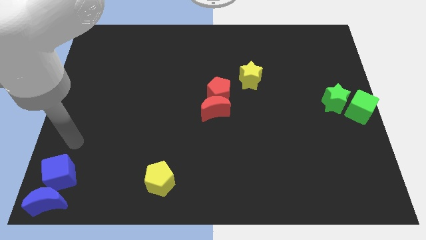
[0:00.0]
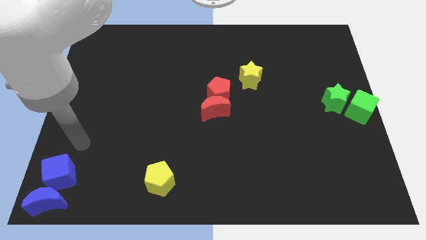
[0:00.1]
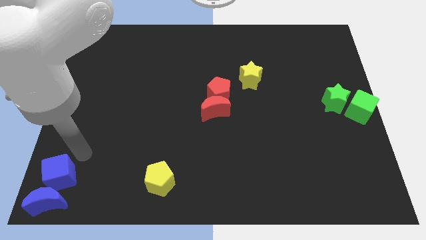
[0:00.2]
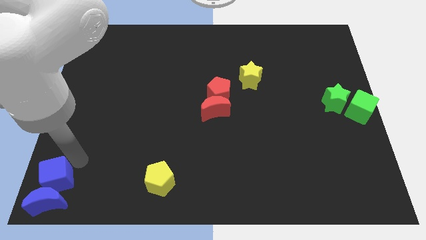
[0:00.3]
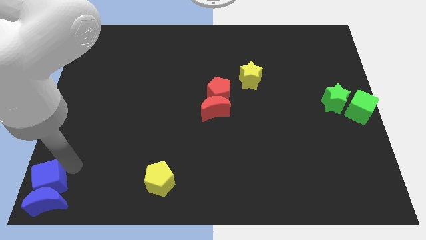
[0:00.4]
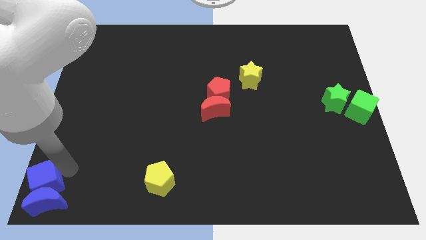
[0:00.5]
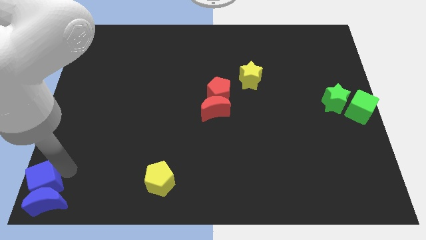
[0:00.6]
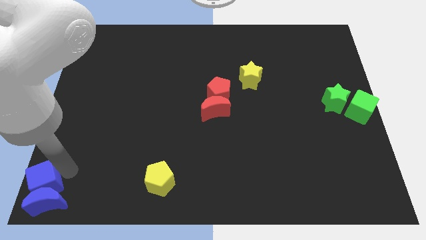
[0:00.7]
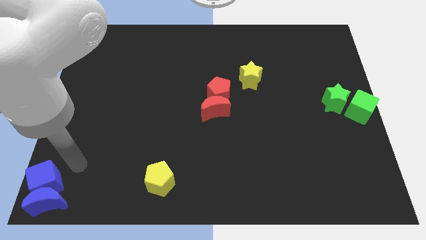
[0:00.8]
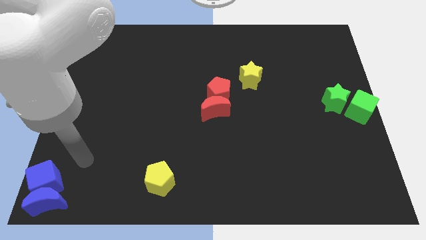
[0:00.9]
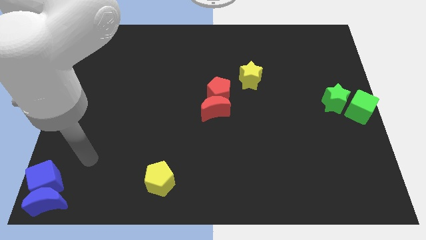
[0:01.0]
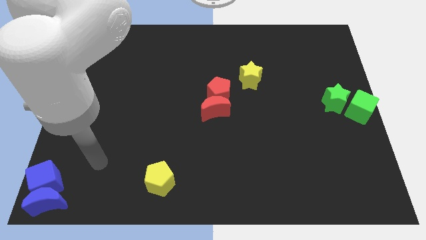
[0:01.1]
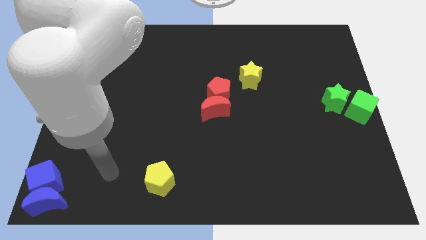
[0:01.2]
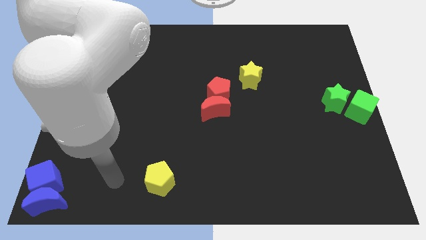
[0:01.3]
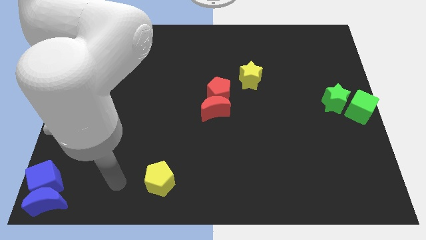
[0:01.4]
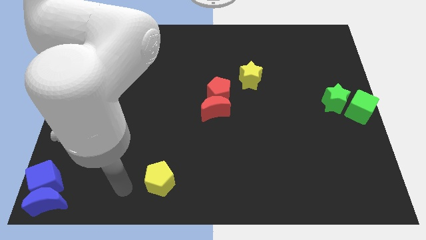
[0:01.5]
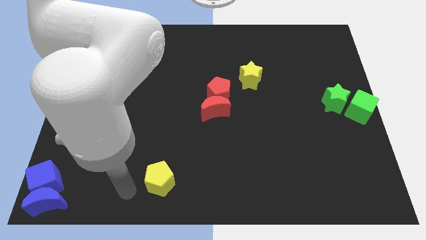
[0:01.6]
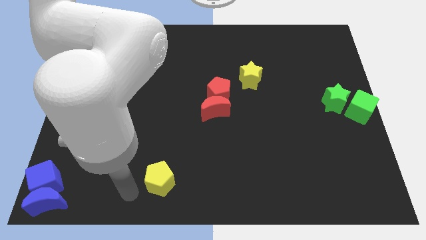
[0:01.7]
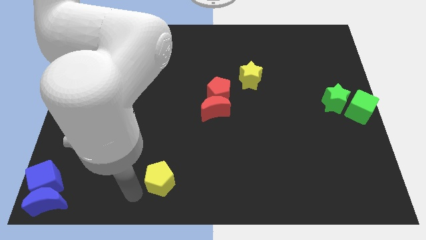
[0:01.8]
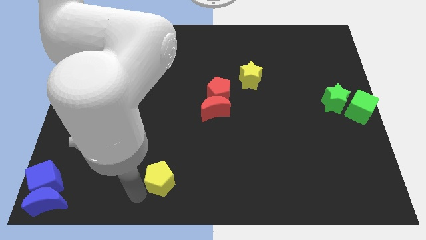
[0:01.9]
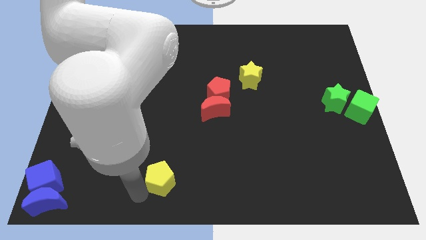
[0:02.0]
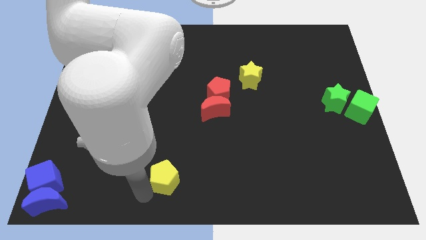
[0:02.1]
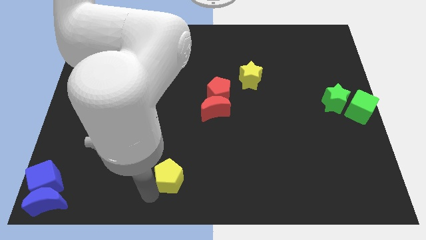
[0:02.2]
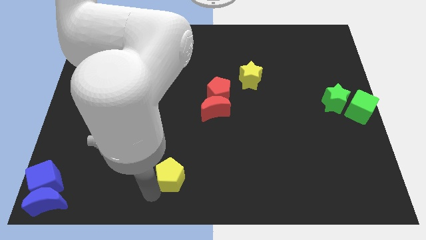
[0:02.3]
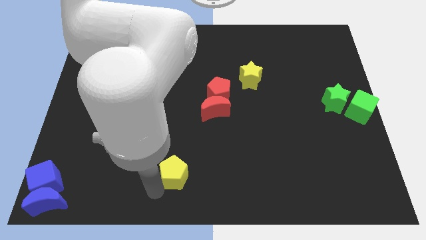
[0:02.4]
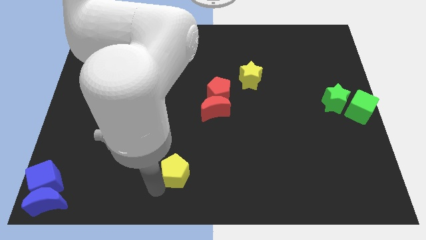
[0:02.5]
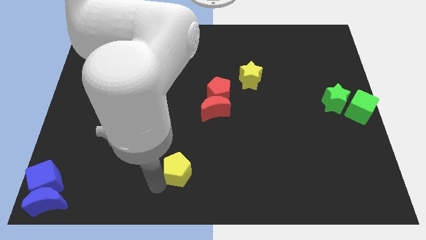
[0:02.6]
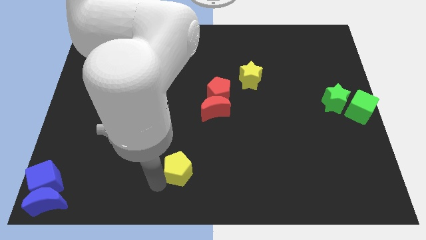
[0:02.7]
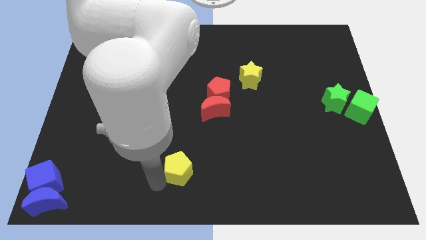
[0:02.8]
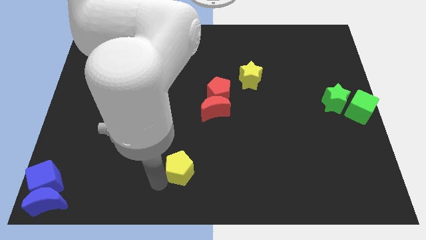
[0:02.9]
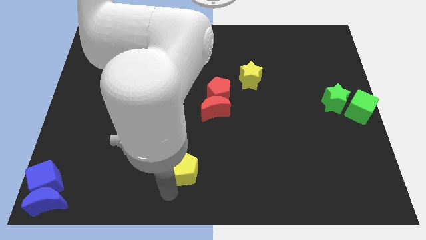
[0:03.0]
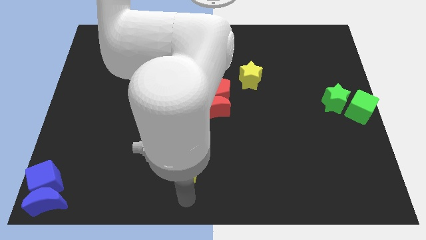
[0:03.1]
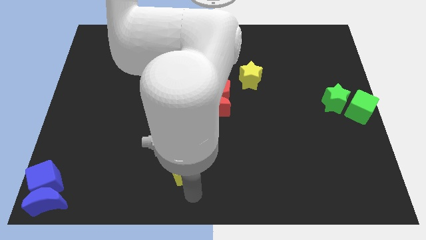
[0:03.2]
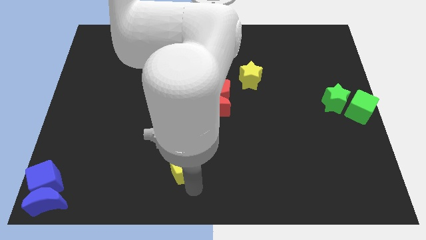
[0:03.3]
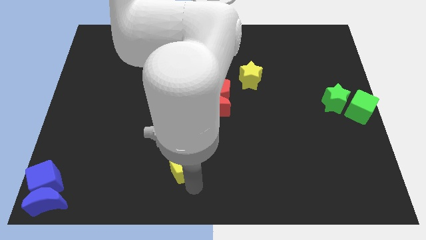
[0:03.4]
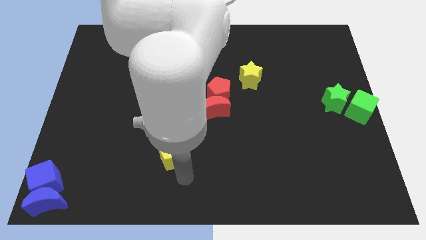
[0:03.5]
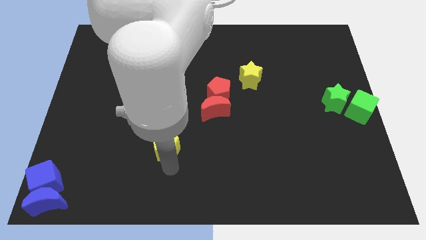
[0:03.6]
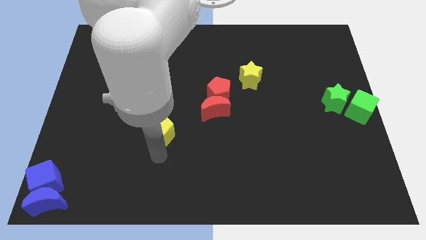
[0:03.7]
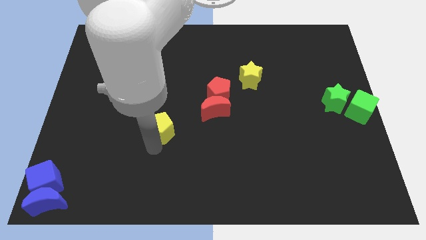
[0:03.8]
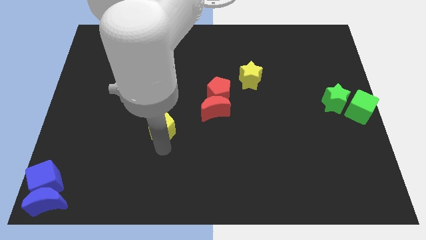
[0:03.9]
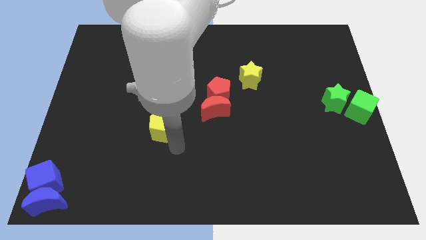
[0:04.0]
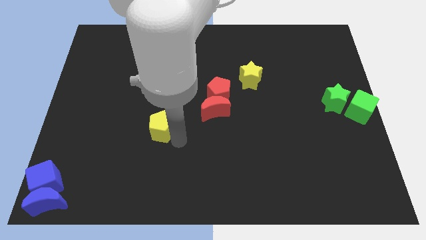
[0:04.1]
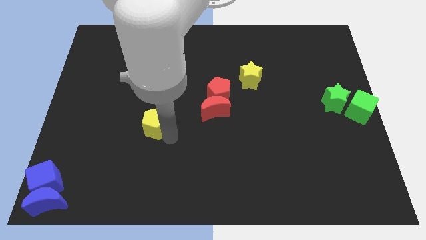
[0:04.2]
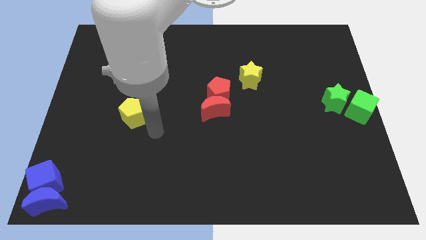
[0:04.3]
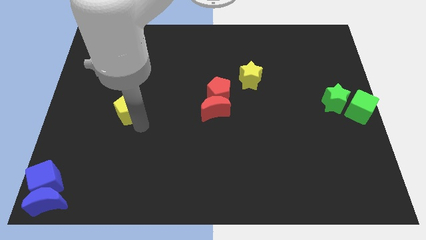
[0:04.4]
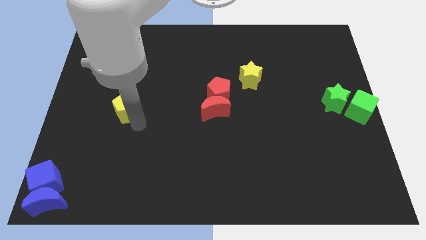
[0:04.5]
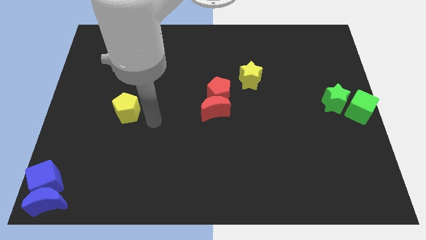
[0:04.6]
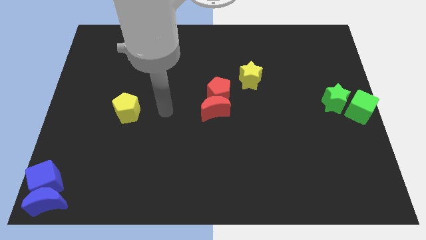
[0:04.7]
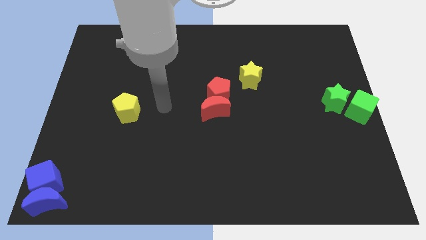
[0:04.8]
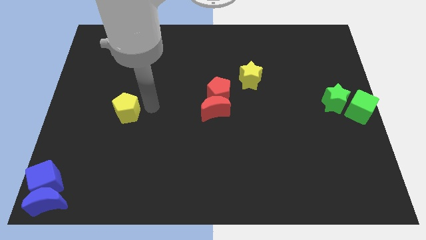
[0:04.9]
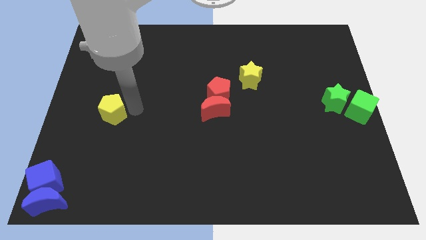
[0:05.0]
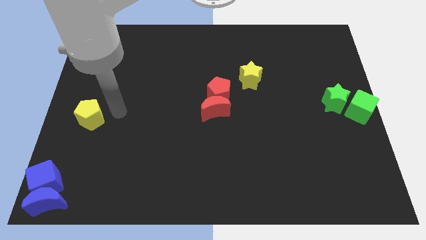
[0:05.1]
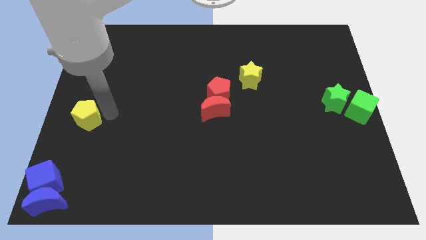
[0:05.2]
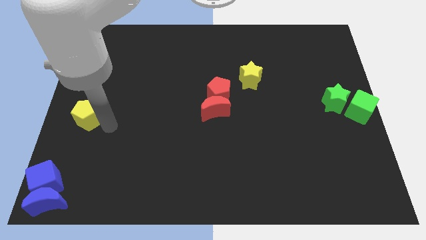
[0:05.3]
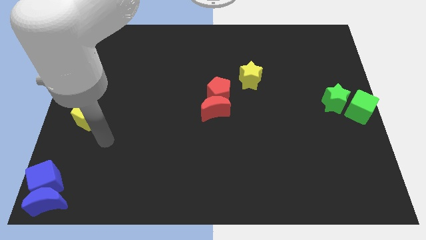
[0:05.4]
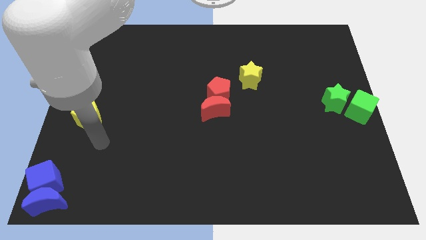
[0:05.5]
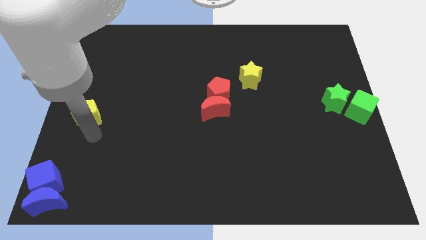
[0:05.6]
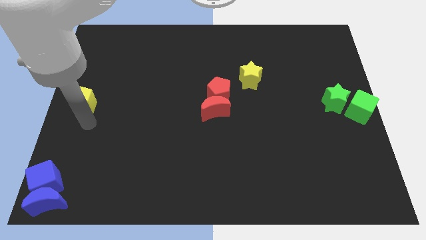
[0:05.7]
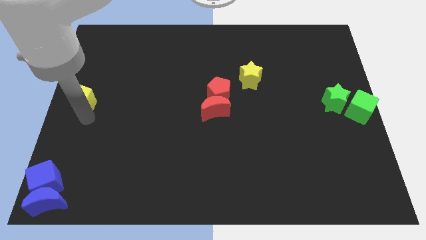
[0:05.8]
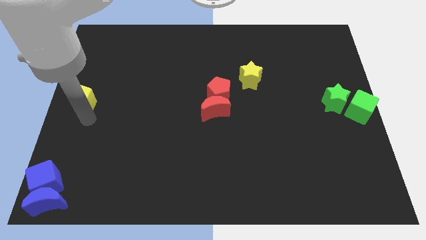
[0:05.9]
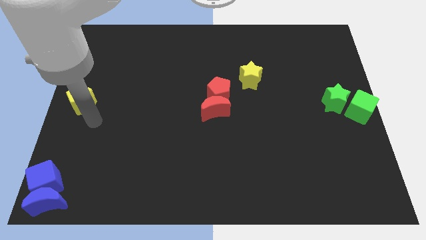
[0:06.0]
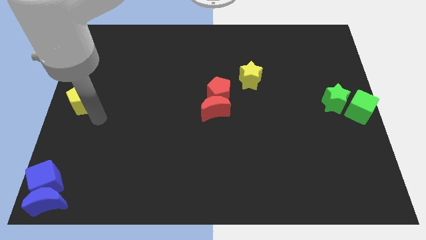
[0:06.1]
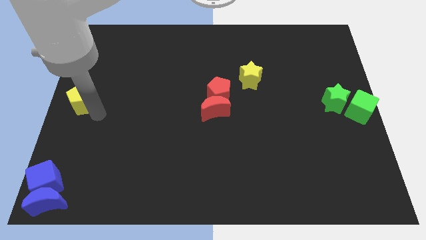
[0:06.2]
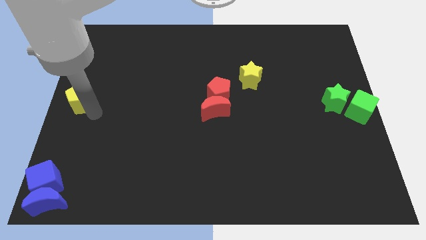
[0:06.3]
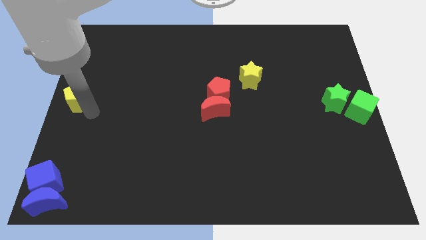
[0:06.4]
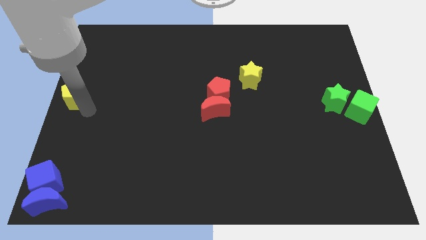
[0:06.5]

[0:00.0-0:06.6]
move the yellow pentagon to the center left of the board

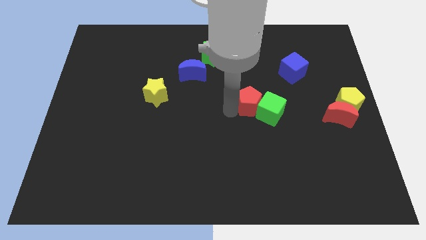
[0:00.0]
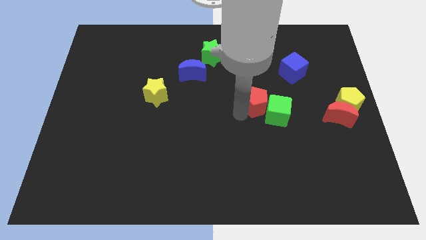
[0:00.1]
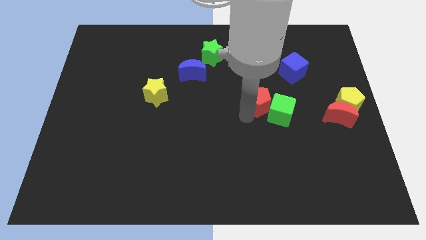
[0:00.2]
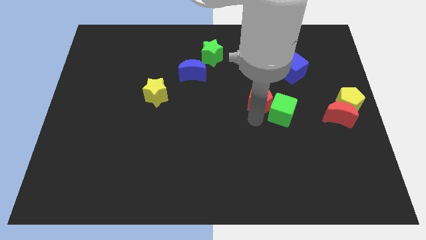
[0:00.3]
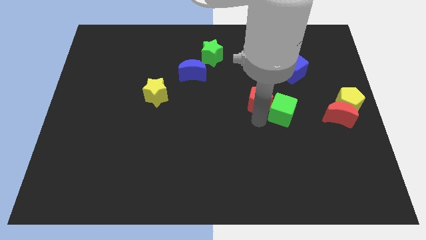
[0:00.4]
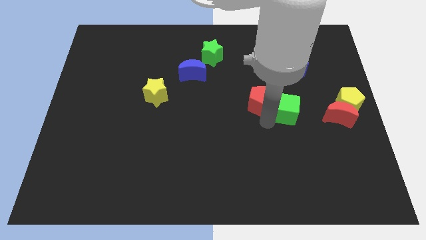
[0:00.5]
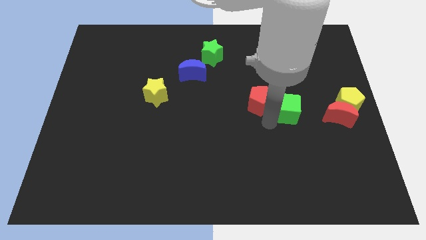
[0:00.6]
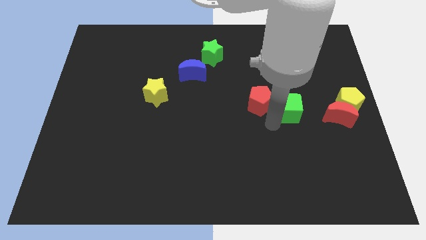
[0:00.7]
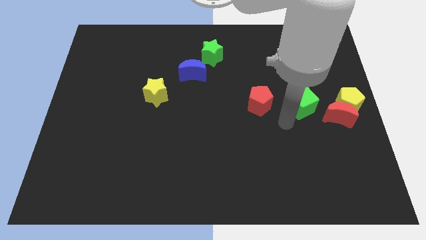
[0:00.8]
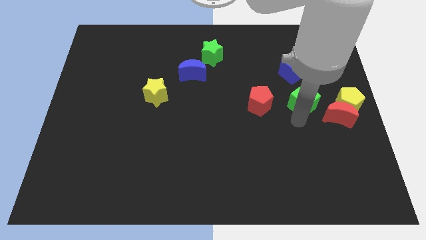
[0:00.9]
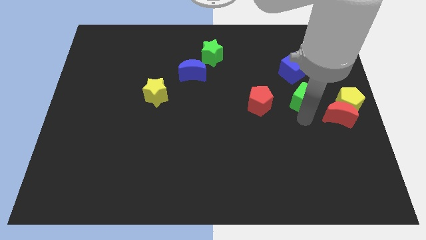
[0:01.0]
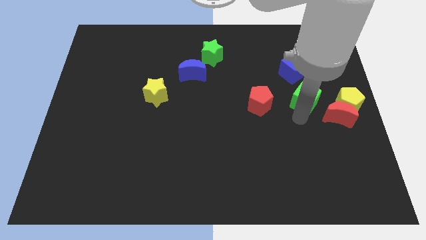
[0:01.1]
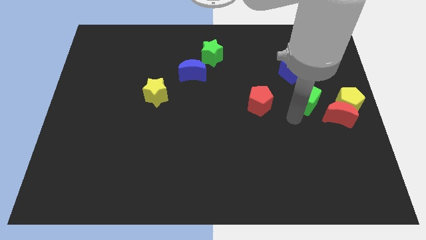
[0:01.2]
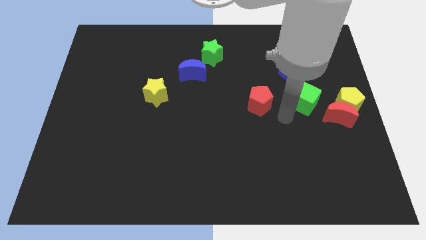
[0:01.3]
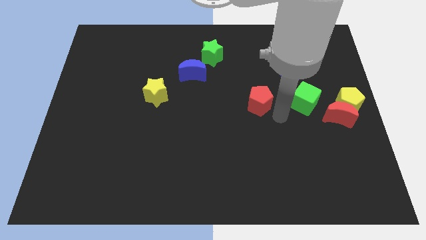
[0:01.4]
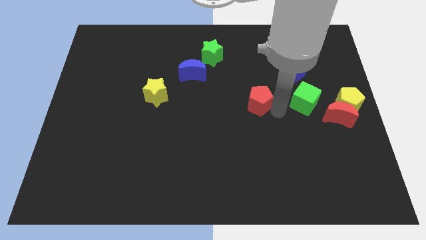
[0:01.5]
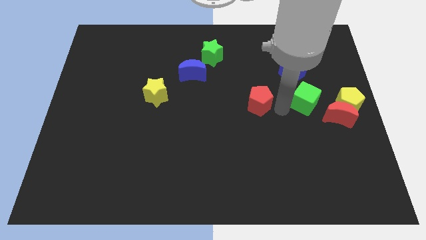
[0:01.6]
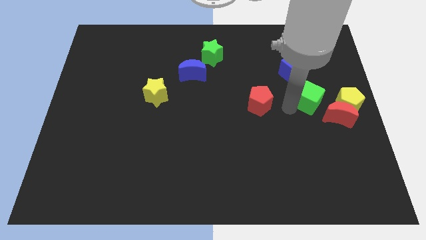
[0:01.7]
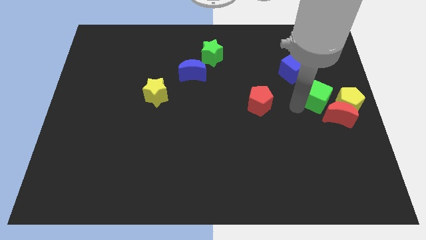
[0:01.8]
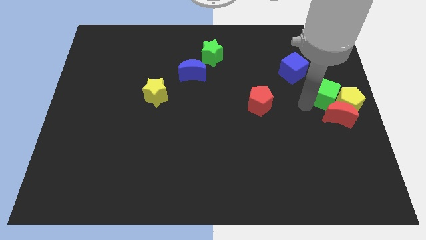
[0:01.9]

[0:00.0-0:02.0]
move the green cube towards the left of the yellow penatgon

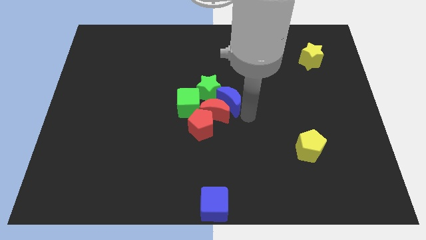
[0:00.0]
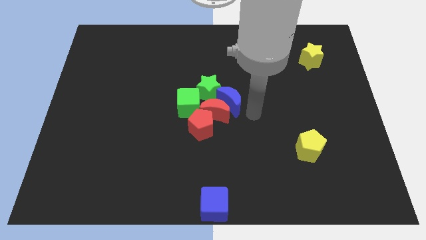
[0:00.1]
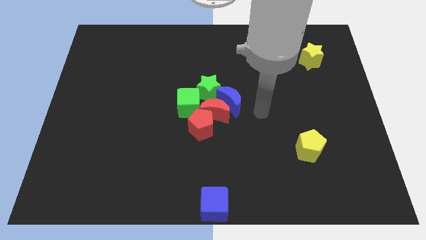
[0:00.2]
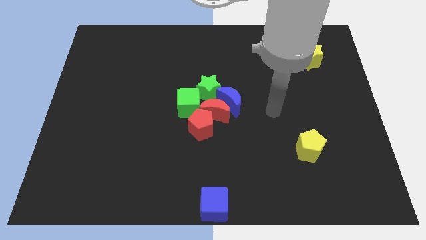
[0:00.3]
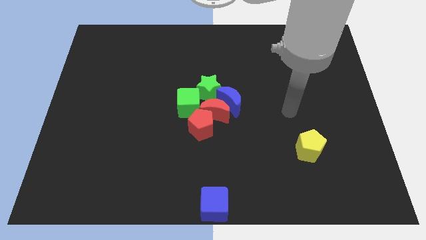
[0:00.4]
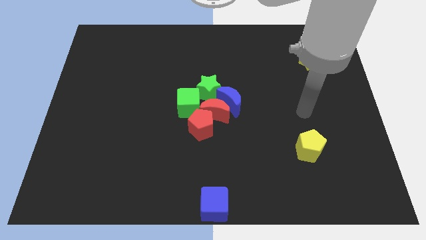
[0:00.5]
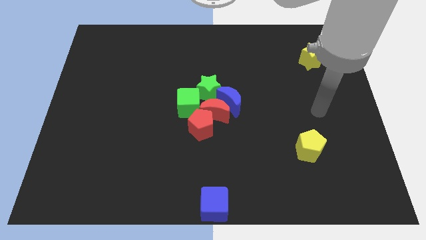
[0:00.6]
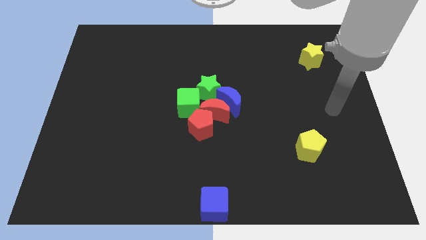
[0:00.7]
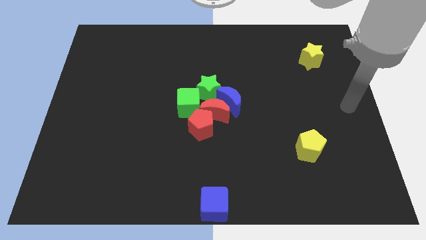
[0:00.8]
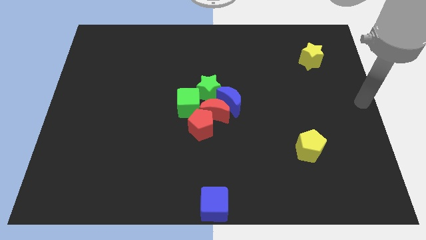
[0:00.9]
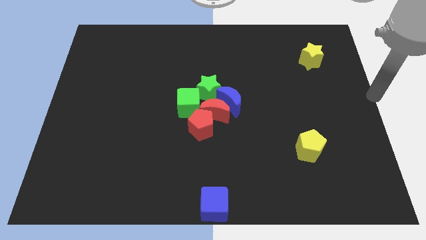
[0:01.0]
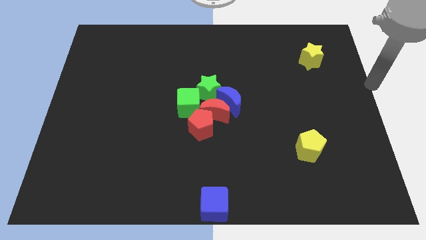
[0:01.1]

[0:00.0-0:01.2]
move your hand at the center right of the board
